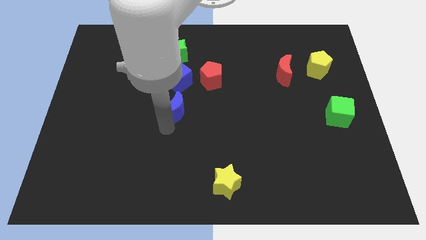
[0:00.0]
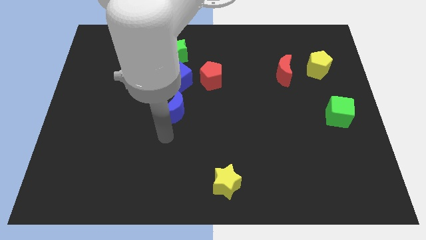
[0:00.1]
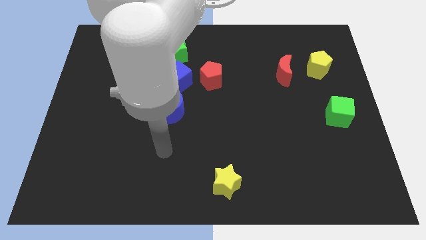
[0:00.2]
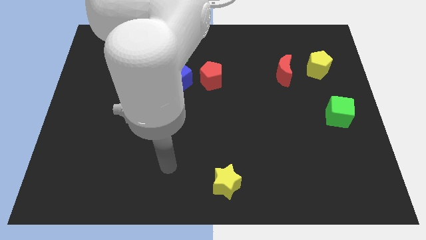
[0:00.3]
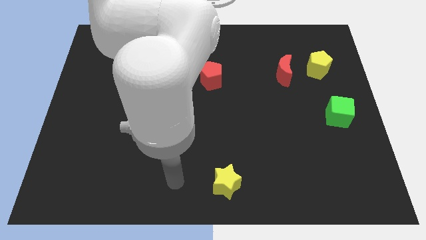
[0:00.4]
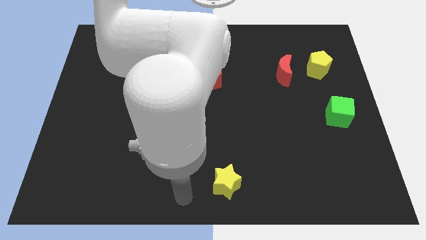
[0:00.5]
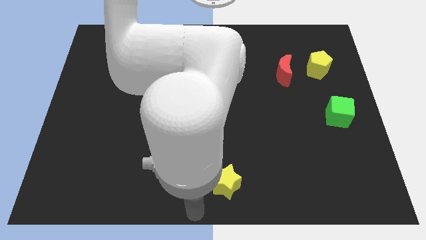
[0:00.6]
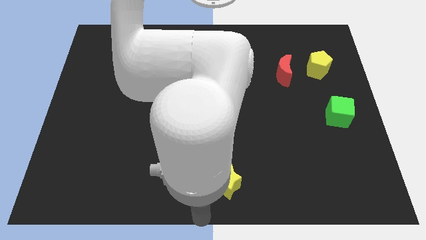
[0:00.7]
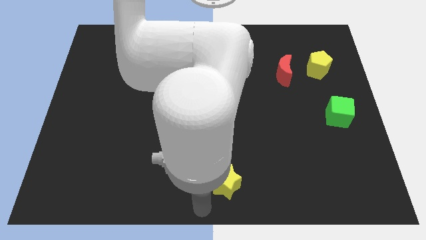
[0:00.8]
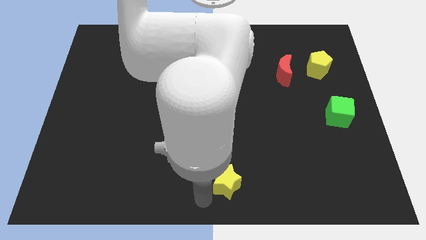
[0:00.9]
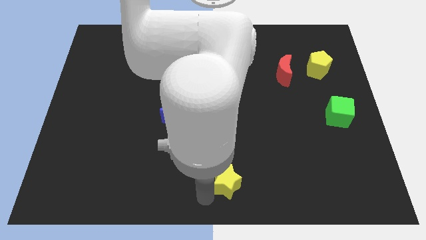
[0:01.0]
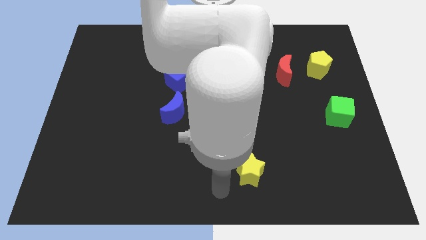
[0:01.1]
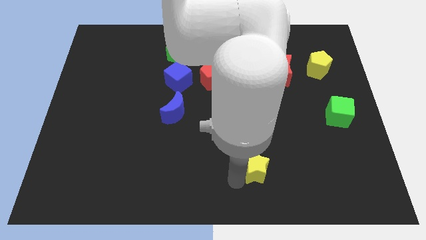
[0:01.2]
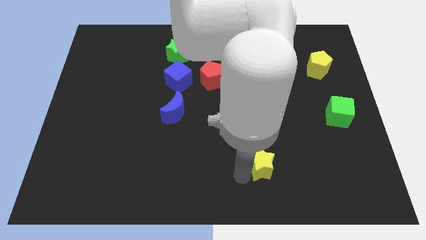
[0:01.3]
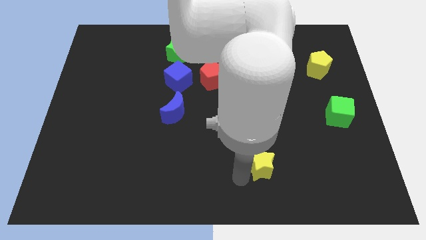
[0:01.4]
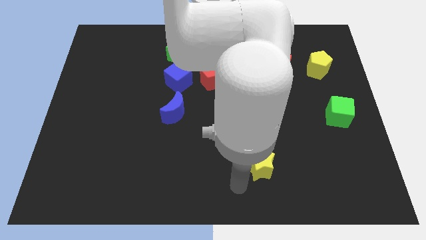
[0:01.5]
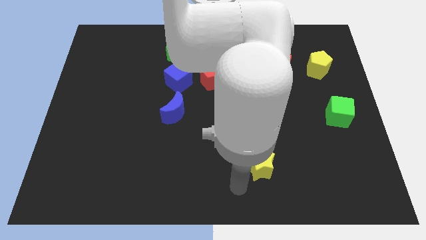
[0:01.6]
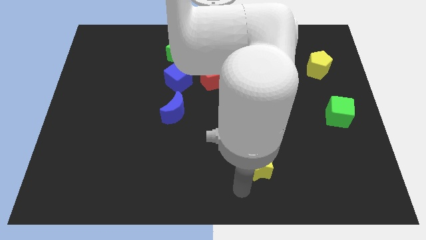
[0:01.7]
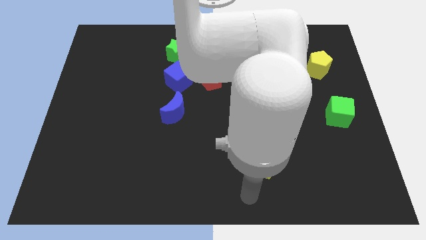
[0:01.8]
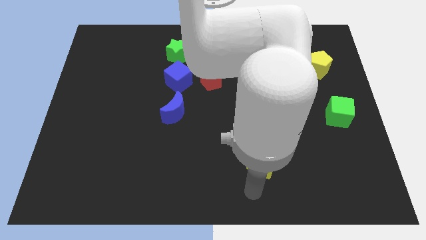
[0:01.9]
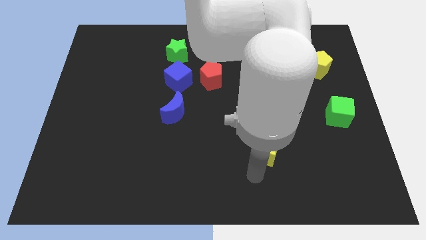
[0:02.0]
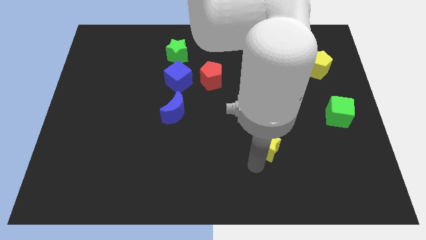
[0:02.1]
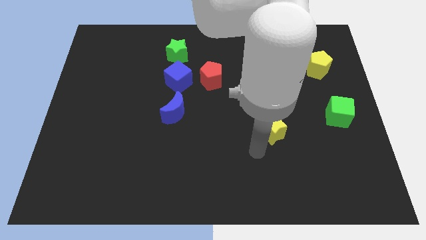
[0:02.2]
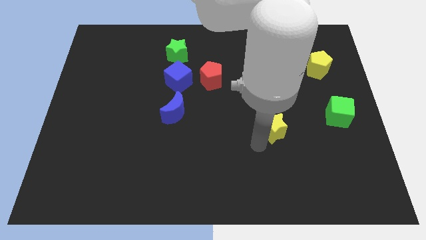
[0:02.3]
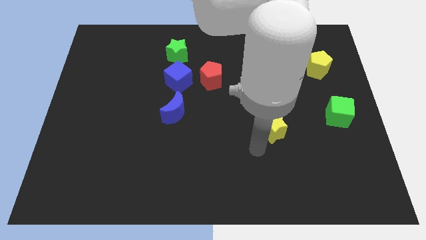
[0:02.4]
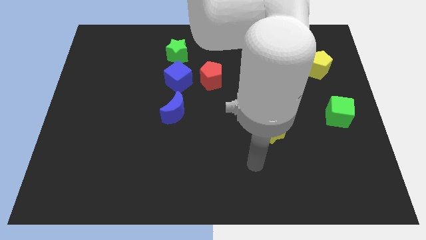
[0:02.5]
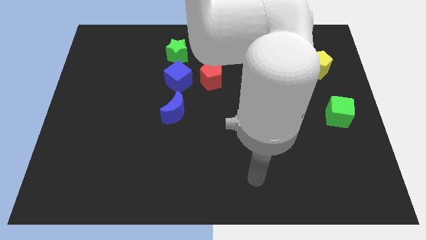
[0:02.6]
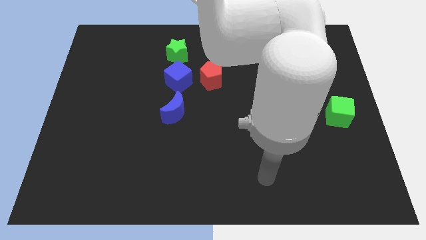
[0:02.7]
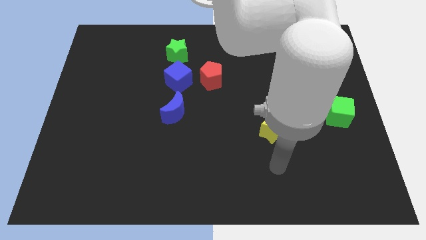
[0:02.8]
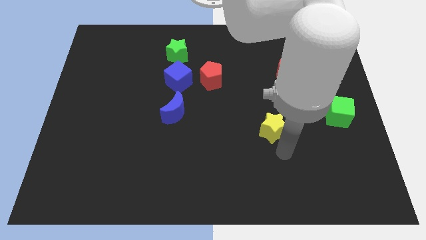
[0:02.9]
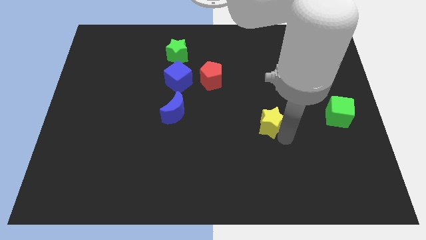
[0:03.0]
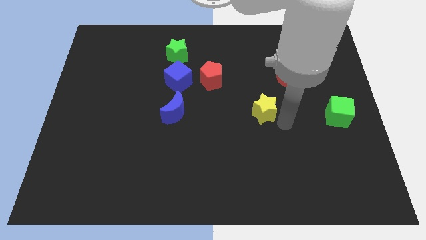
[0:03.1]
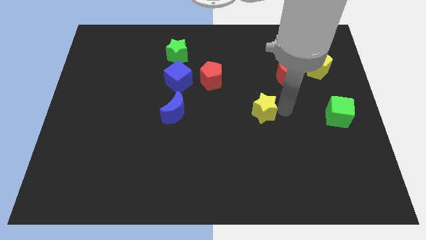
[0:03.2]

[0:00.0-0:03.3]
push the yellow star to the left of the green cube

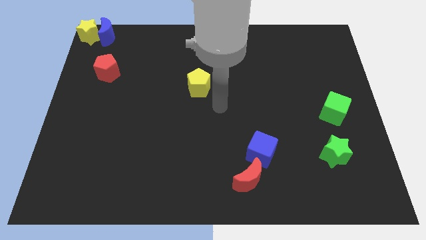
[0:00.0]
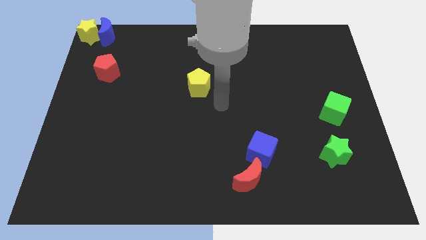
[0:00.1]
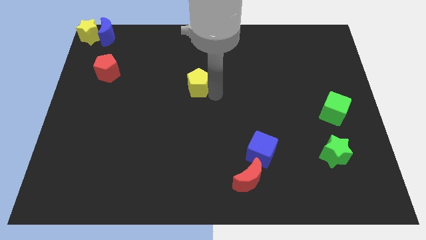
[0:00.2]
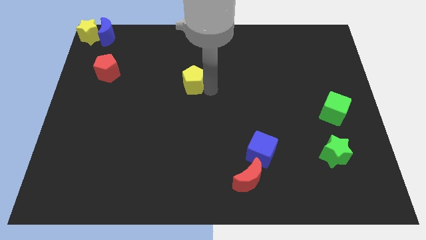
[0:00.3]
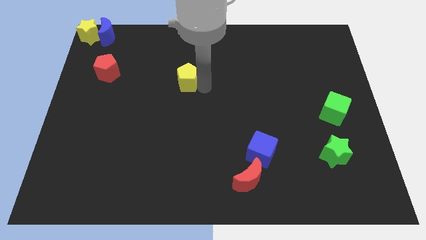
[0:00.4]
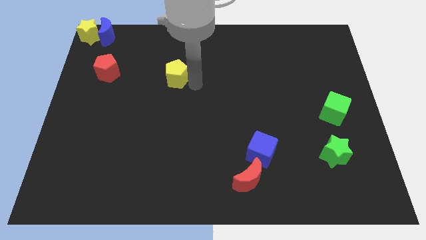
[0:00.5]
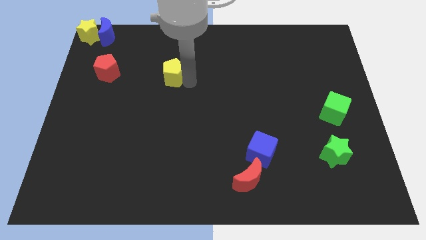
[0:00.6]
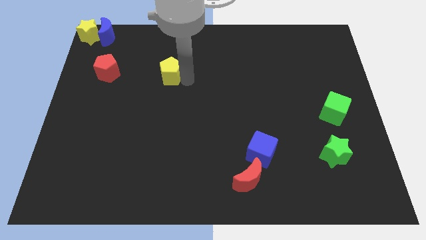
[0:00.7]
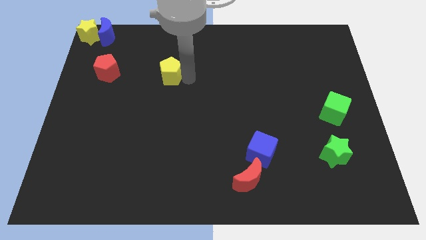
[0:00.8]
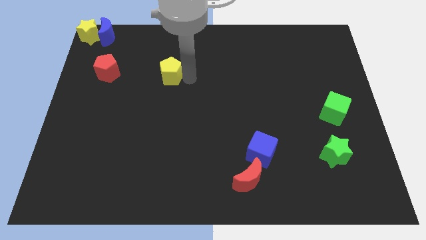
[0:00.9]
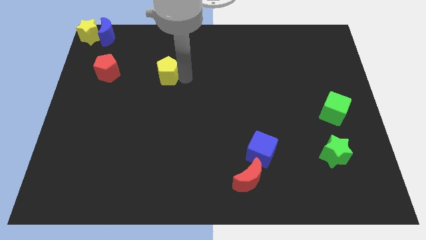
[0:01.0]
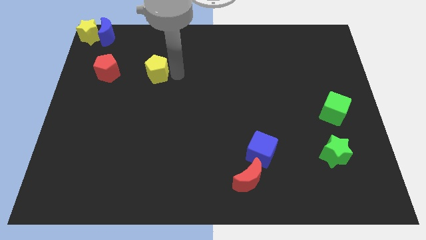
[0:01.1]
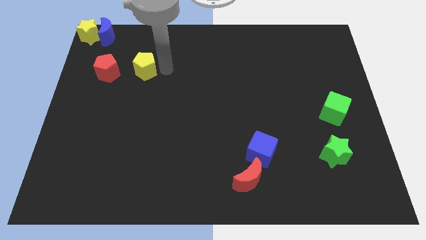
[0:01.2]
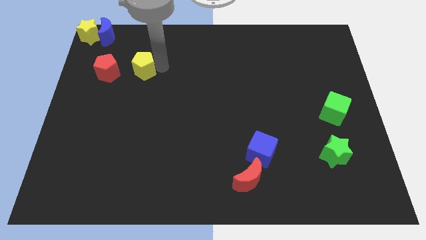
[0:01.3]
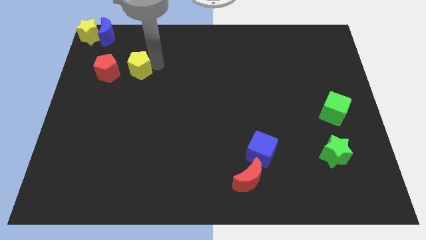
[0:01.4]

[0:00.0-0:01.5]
move the yellow pentagon to the right of the red pentagon

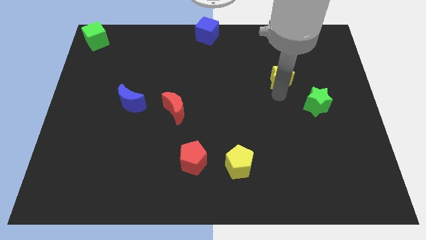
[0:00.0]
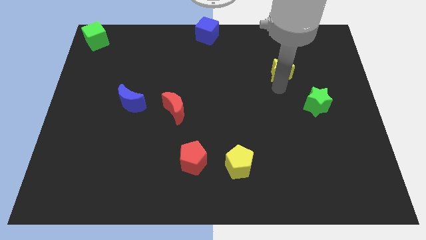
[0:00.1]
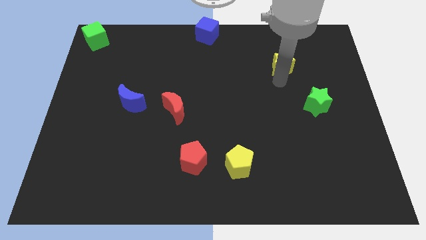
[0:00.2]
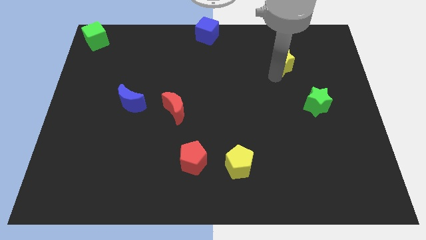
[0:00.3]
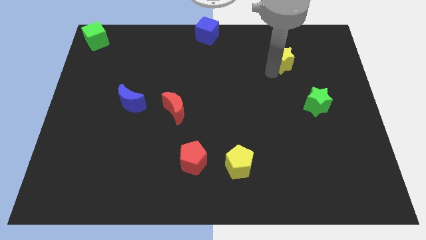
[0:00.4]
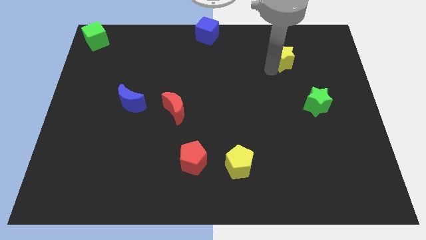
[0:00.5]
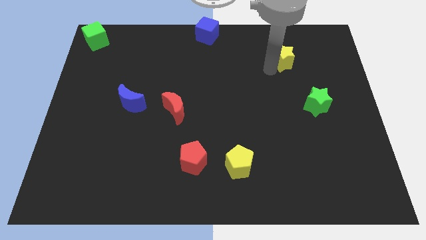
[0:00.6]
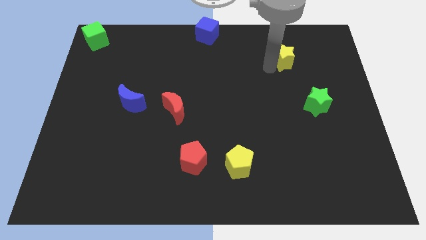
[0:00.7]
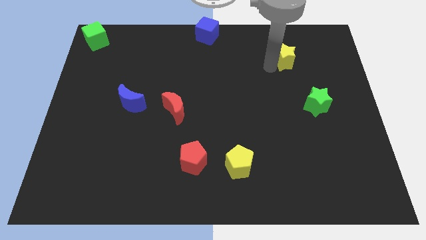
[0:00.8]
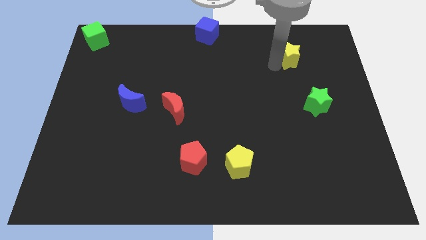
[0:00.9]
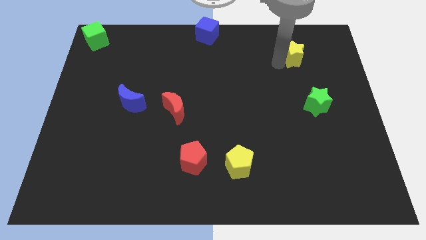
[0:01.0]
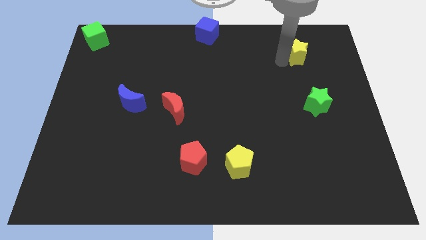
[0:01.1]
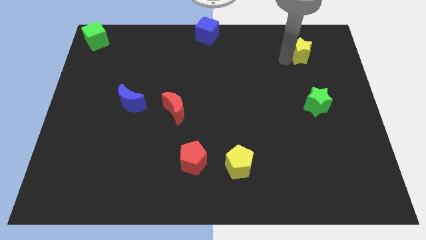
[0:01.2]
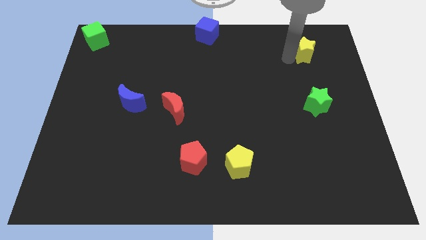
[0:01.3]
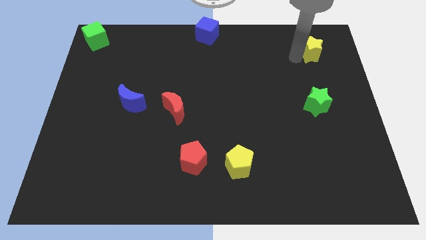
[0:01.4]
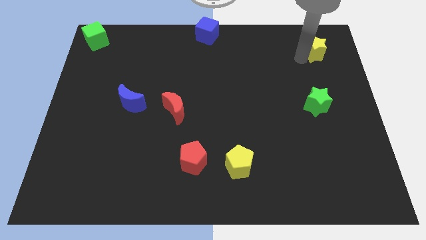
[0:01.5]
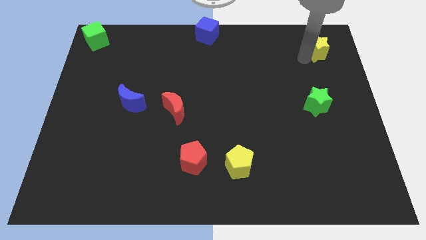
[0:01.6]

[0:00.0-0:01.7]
place the yellow star vertically above the green star

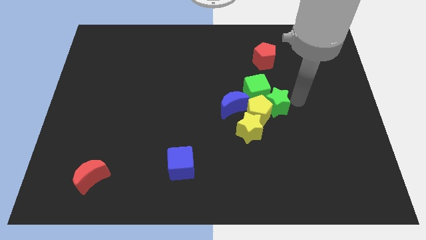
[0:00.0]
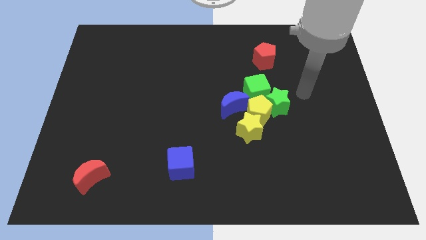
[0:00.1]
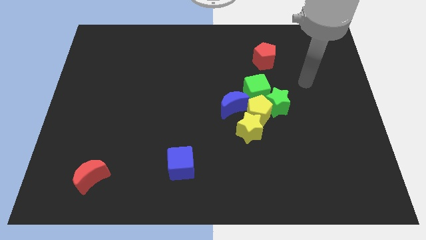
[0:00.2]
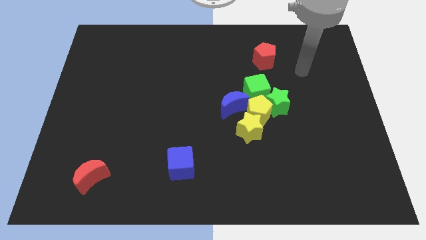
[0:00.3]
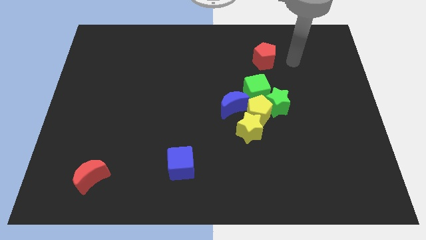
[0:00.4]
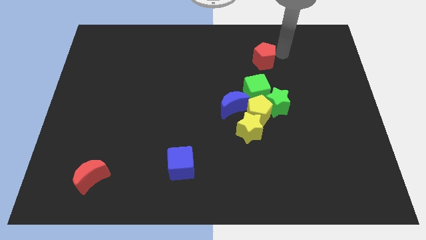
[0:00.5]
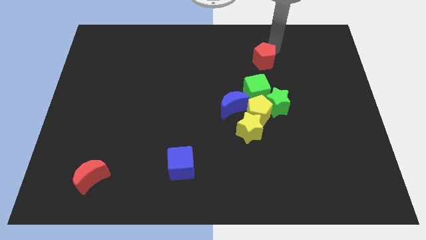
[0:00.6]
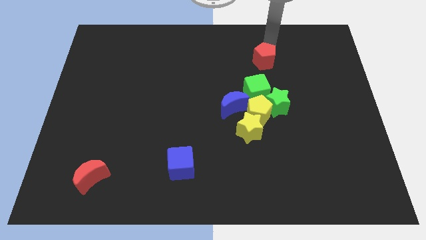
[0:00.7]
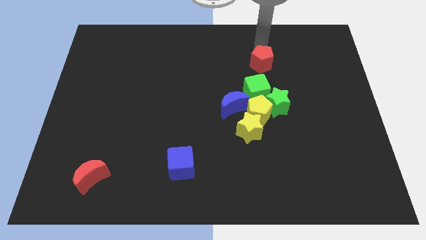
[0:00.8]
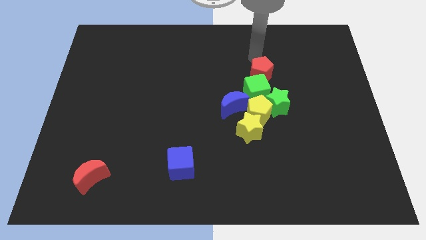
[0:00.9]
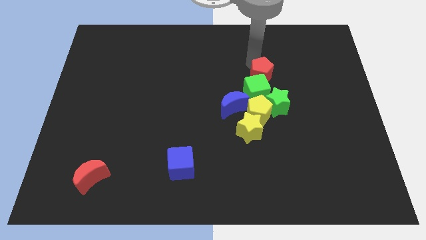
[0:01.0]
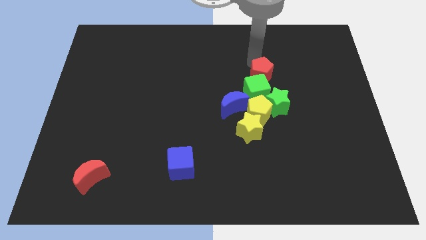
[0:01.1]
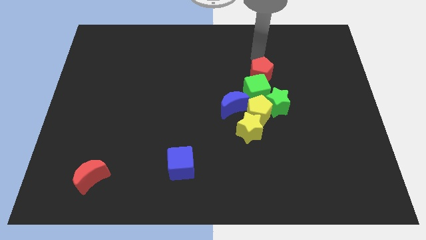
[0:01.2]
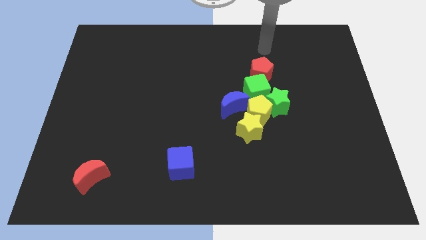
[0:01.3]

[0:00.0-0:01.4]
bring the red pentagon at the top side of the green cube

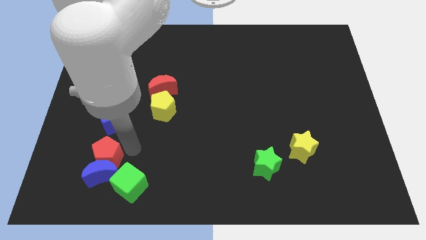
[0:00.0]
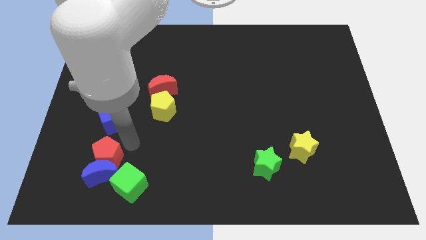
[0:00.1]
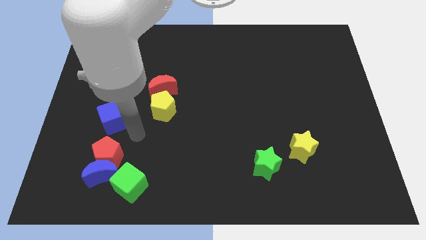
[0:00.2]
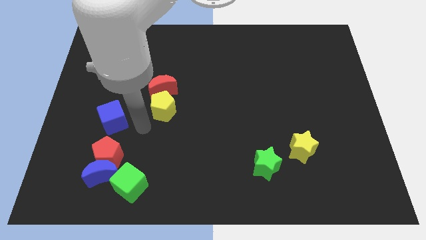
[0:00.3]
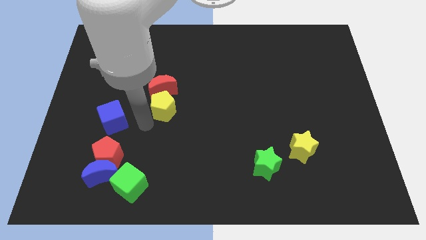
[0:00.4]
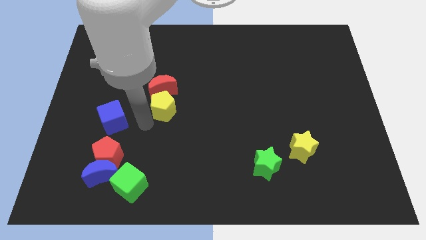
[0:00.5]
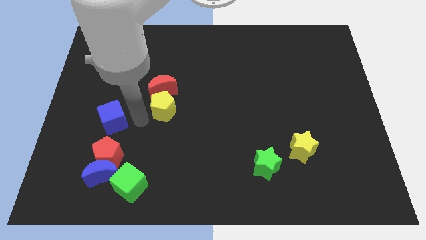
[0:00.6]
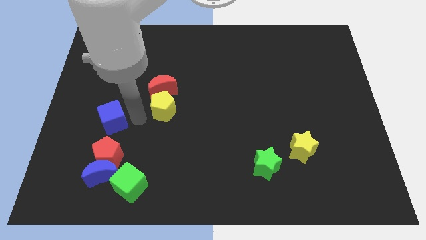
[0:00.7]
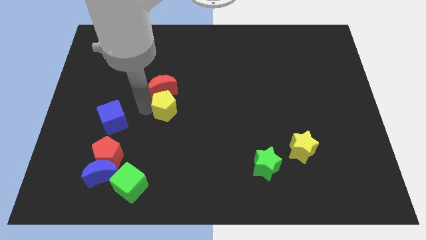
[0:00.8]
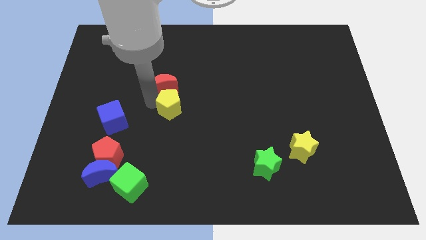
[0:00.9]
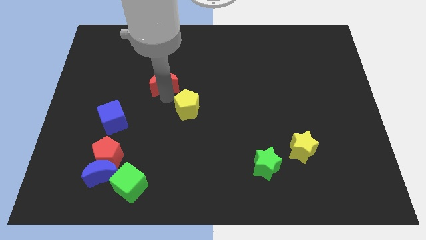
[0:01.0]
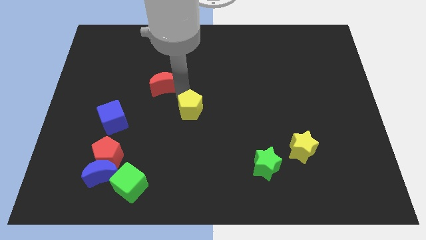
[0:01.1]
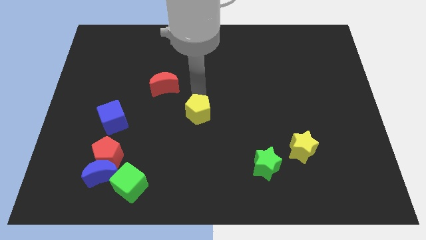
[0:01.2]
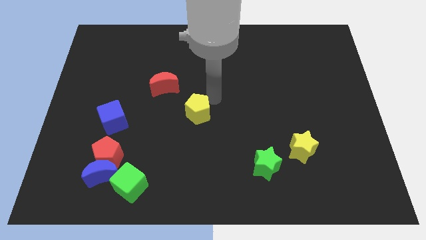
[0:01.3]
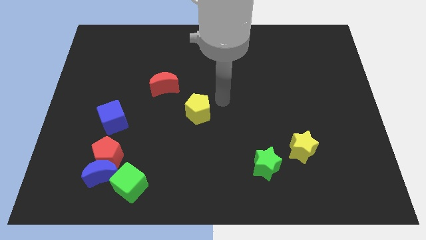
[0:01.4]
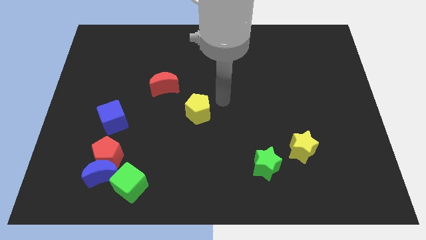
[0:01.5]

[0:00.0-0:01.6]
separate the yellow pentagon from the red moon
